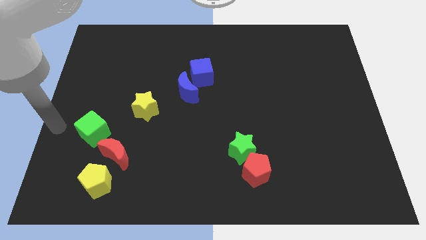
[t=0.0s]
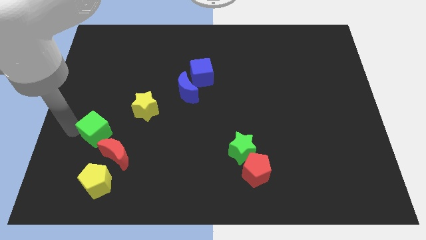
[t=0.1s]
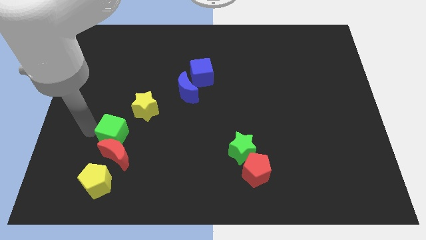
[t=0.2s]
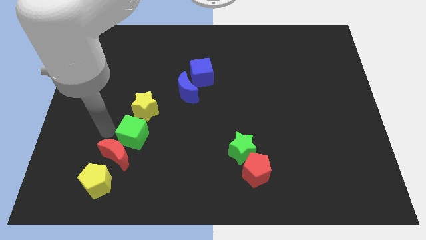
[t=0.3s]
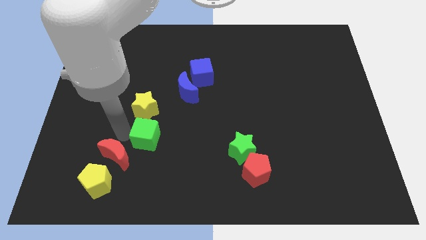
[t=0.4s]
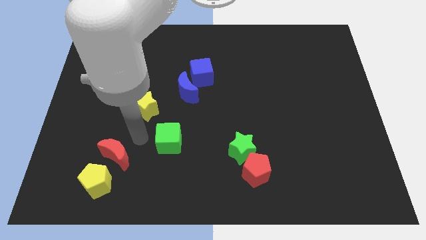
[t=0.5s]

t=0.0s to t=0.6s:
push green cube below yellow star

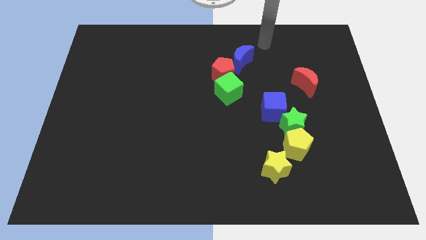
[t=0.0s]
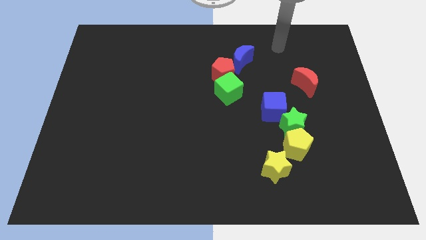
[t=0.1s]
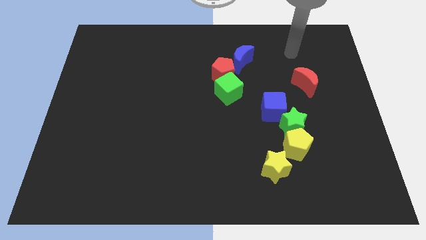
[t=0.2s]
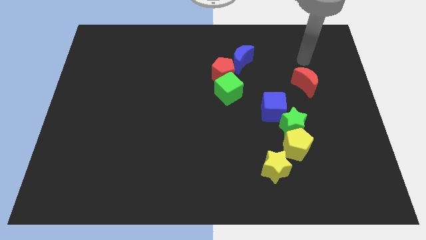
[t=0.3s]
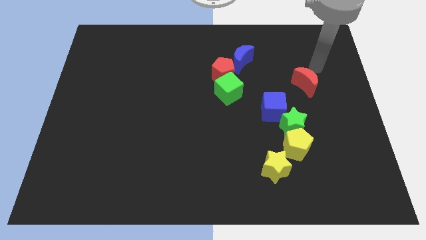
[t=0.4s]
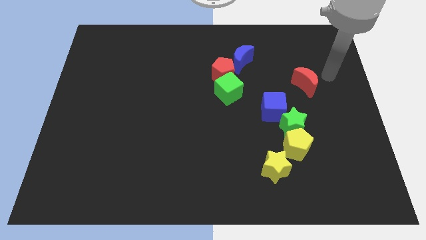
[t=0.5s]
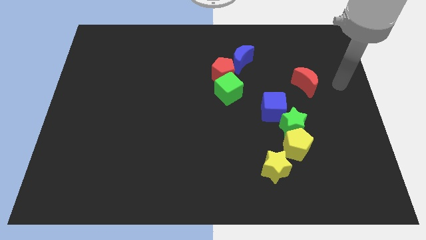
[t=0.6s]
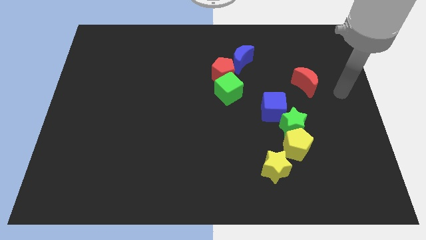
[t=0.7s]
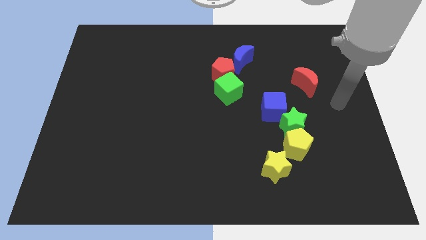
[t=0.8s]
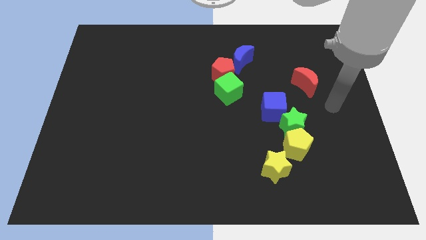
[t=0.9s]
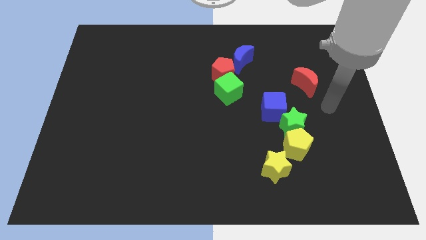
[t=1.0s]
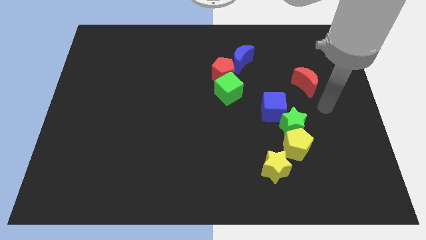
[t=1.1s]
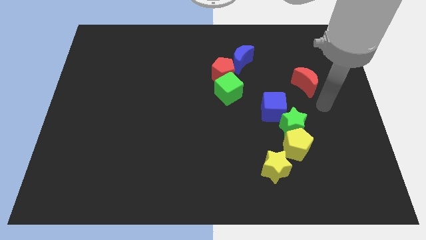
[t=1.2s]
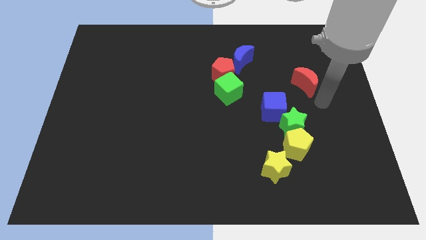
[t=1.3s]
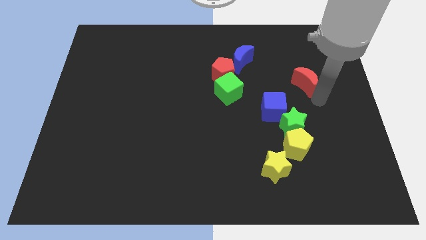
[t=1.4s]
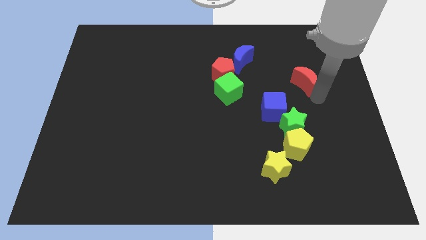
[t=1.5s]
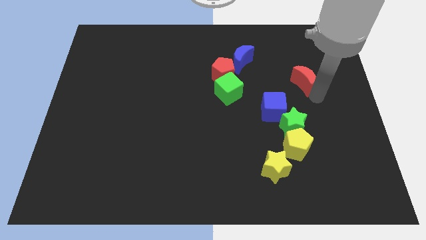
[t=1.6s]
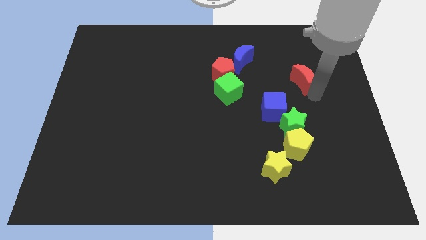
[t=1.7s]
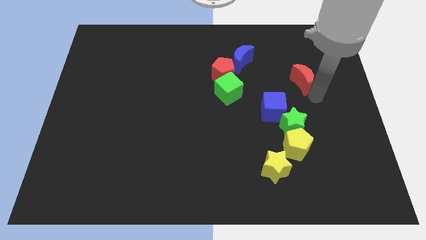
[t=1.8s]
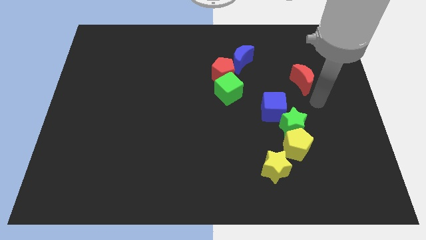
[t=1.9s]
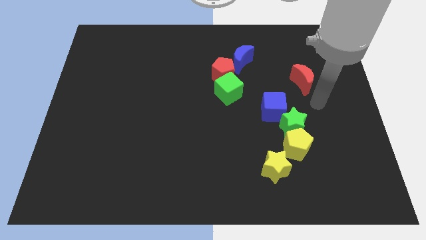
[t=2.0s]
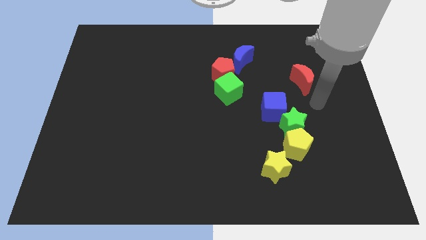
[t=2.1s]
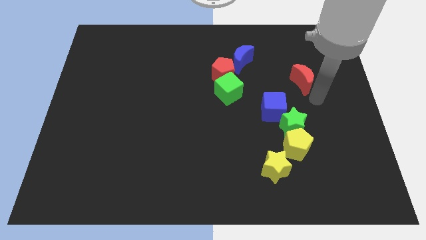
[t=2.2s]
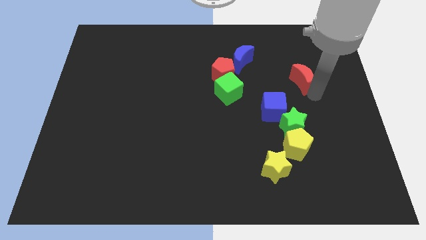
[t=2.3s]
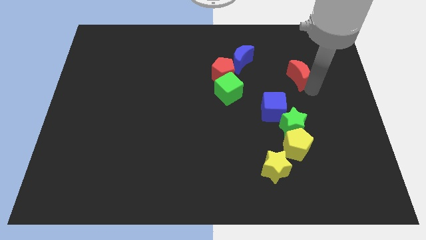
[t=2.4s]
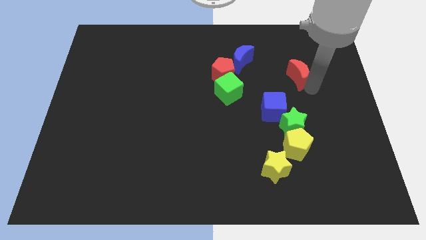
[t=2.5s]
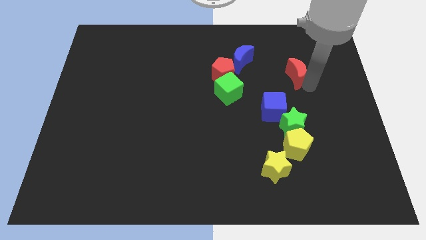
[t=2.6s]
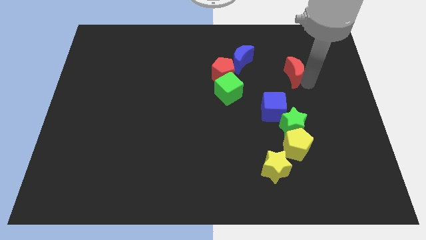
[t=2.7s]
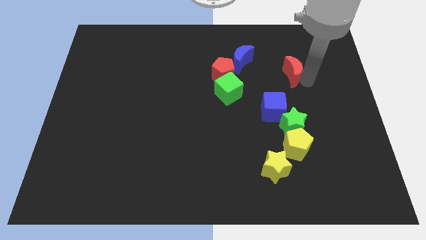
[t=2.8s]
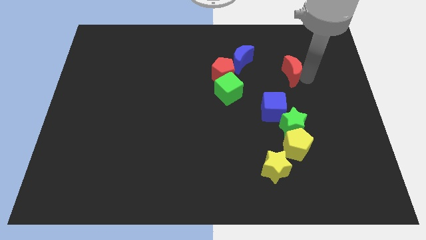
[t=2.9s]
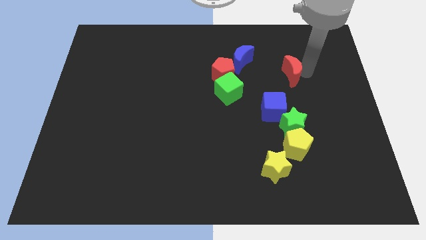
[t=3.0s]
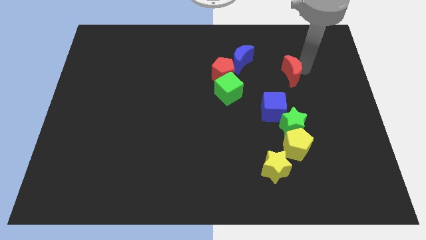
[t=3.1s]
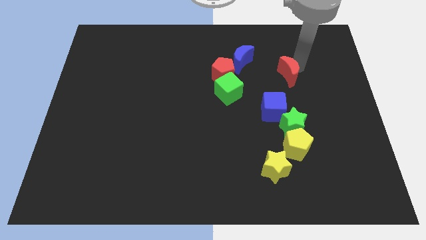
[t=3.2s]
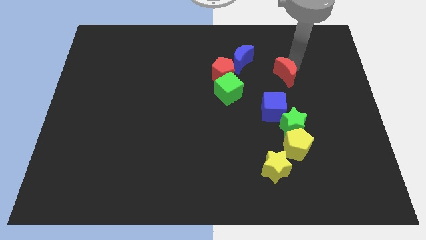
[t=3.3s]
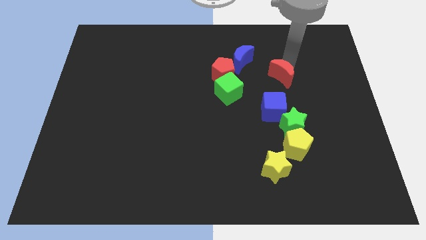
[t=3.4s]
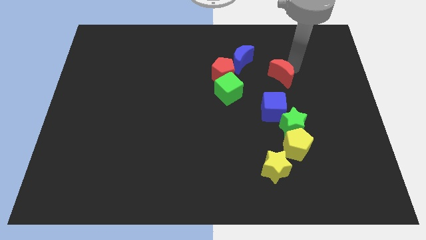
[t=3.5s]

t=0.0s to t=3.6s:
push the red crescent slightly to the right

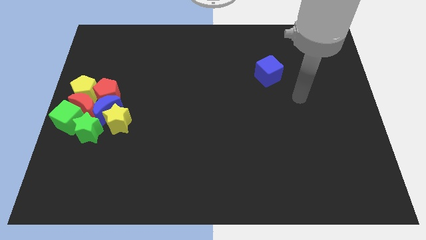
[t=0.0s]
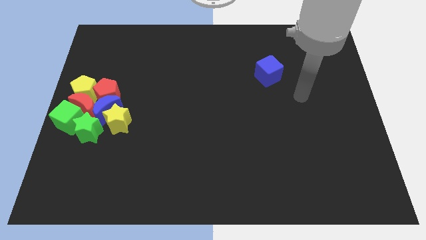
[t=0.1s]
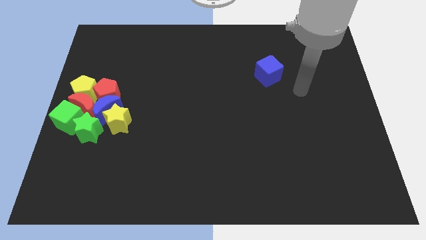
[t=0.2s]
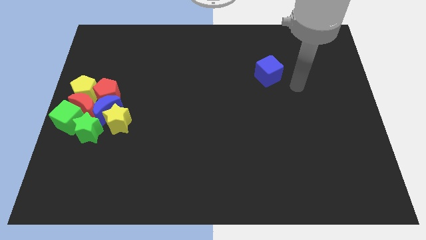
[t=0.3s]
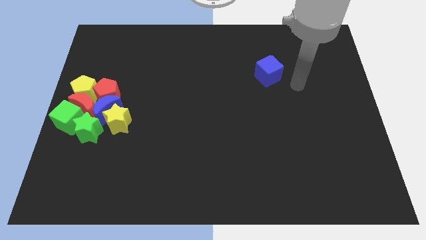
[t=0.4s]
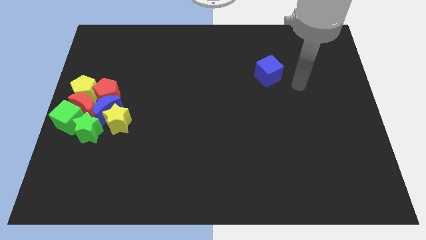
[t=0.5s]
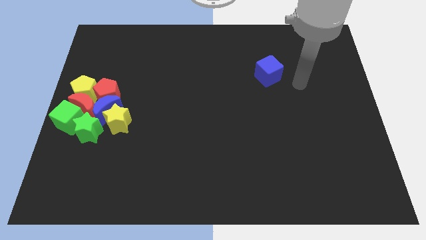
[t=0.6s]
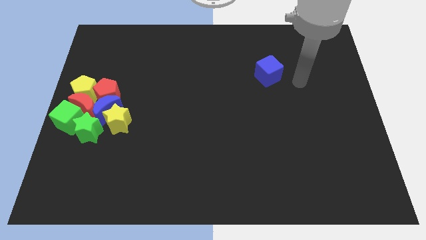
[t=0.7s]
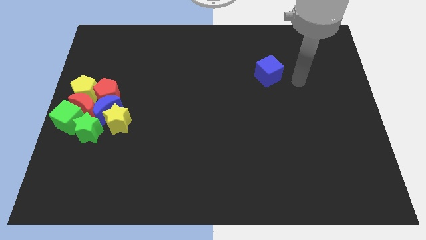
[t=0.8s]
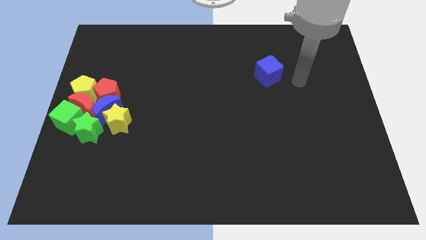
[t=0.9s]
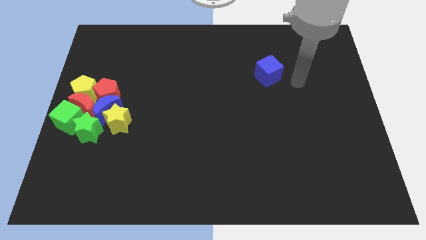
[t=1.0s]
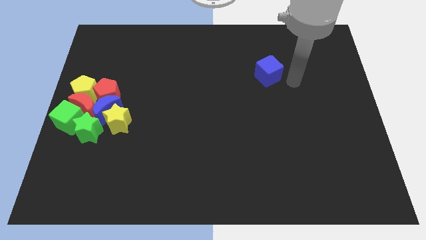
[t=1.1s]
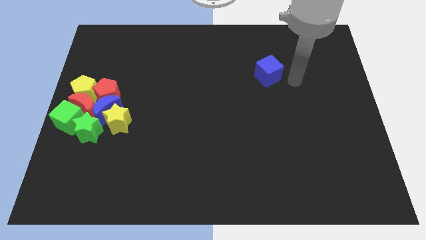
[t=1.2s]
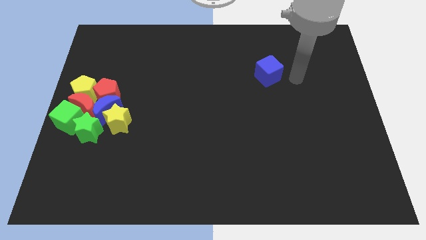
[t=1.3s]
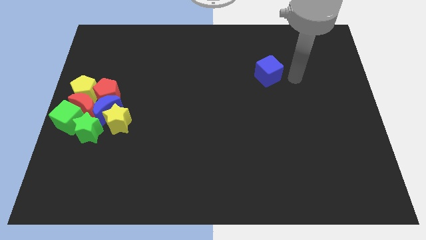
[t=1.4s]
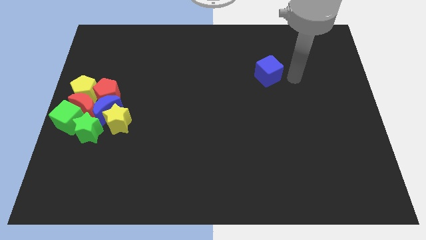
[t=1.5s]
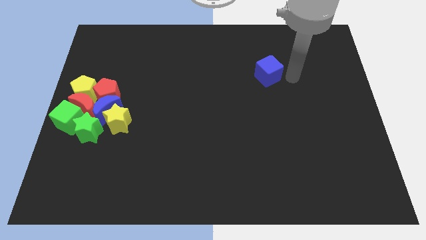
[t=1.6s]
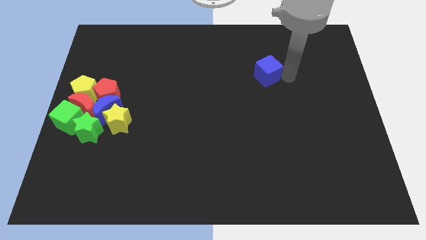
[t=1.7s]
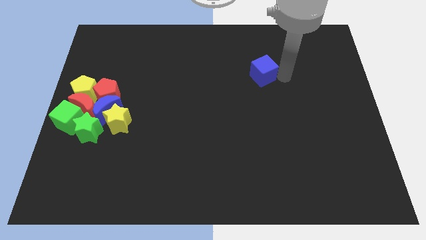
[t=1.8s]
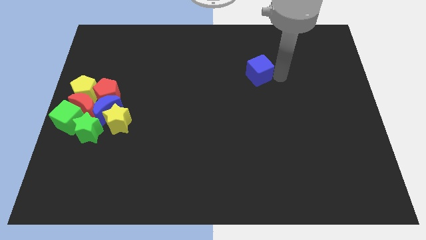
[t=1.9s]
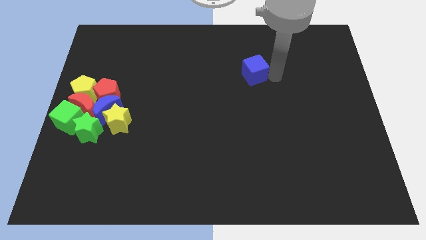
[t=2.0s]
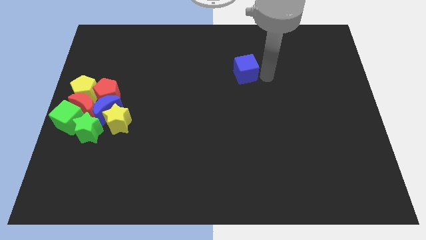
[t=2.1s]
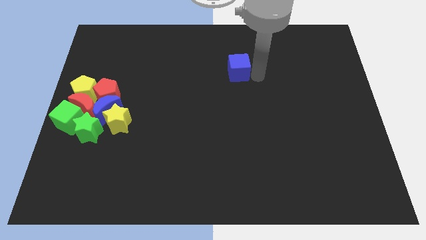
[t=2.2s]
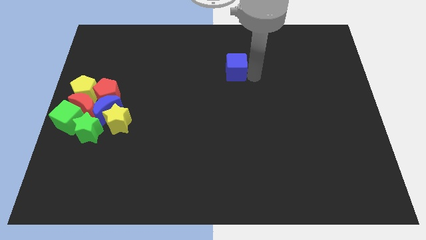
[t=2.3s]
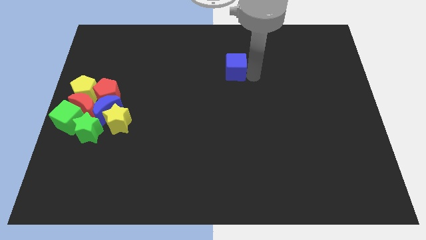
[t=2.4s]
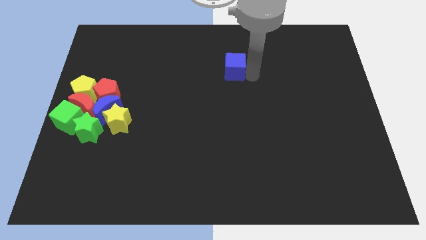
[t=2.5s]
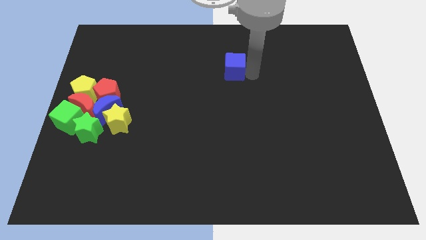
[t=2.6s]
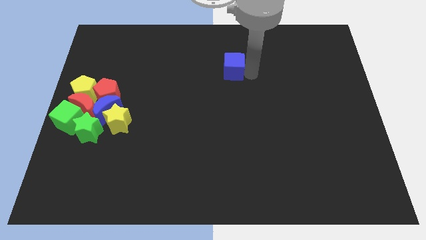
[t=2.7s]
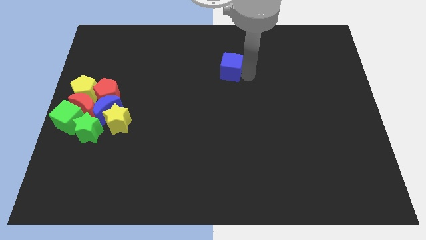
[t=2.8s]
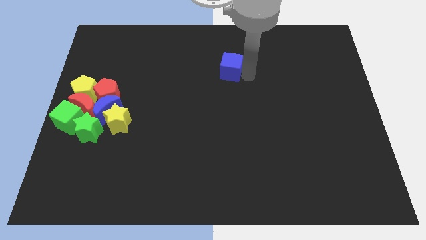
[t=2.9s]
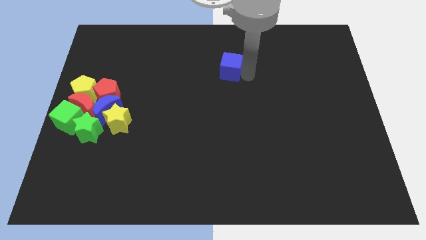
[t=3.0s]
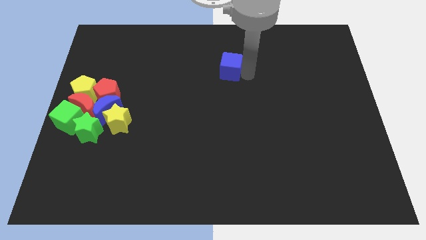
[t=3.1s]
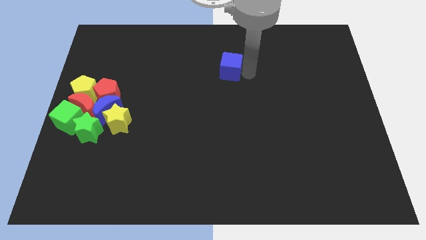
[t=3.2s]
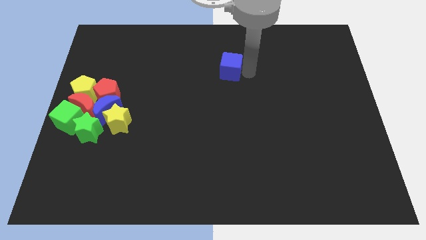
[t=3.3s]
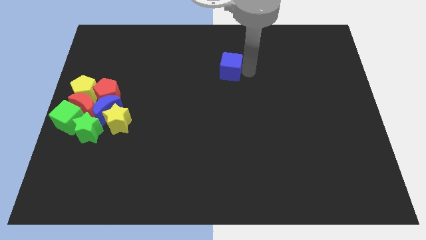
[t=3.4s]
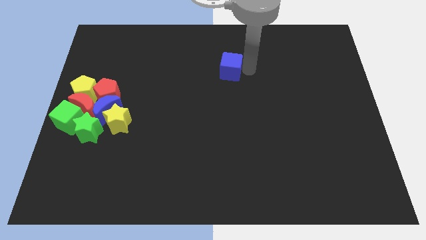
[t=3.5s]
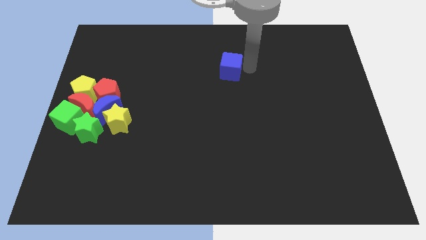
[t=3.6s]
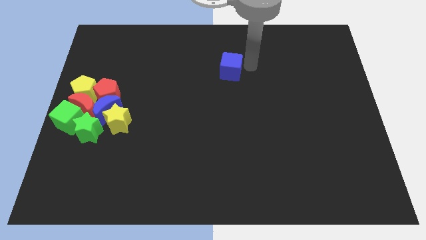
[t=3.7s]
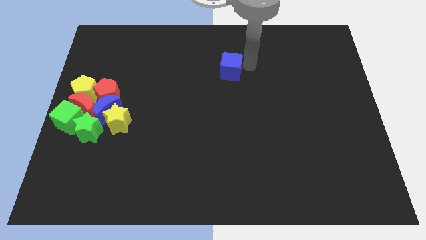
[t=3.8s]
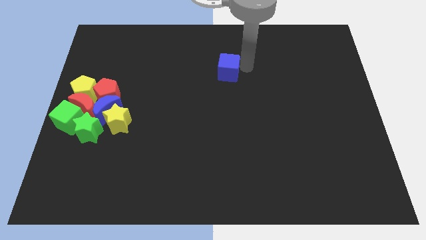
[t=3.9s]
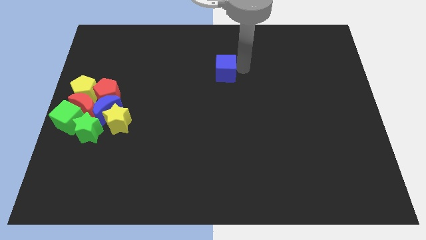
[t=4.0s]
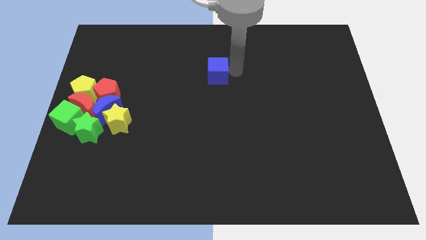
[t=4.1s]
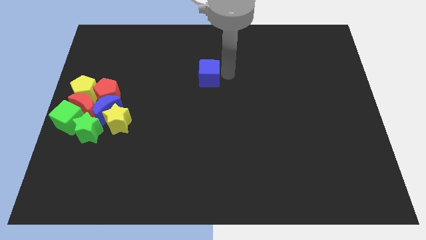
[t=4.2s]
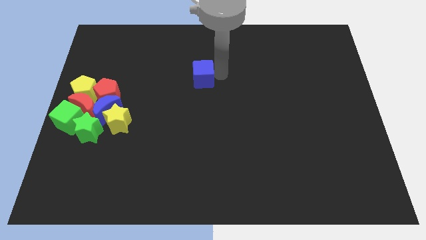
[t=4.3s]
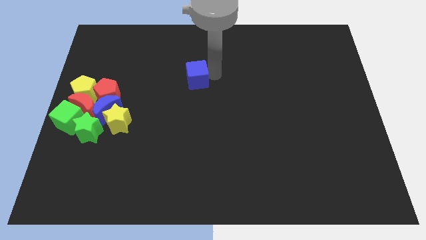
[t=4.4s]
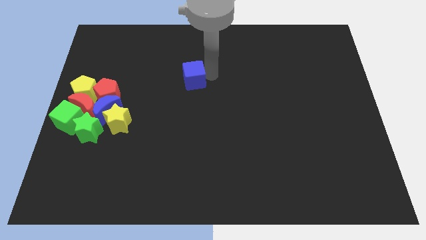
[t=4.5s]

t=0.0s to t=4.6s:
push the blue cube towards the center of the board

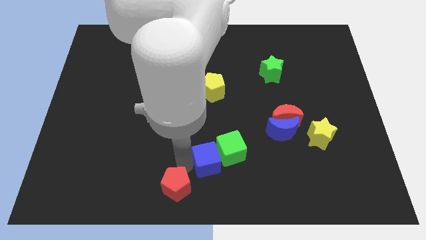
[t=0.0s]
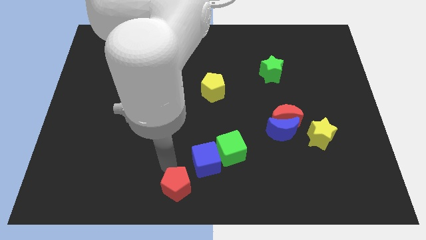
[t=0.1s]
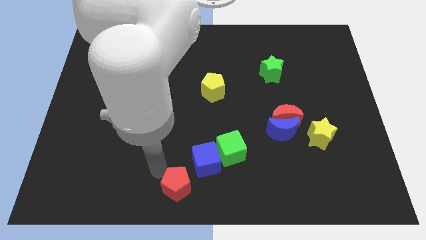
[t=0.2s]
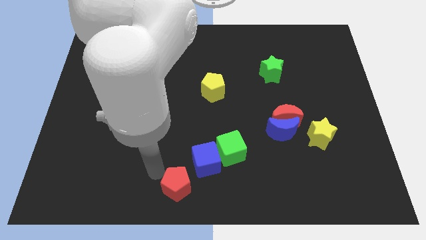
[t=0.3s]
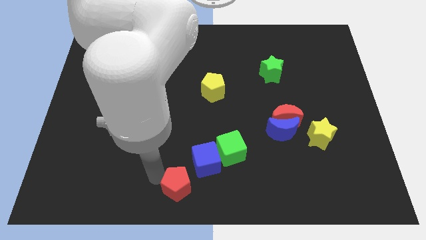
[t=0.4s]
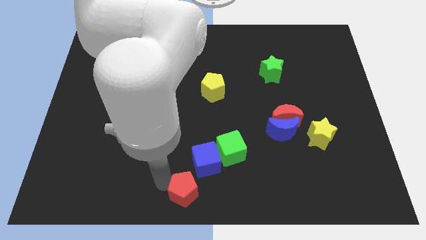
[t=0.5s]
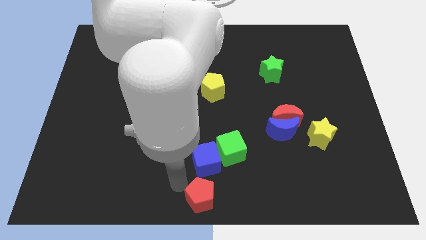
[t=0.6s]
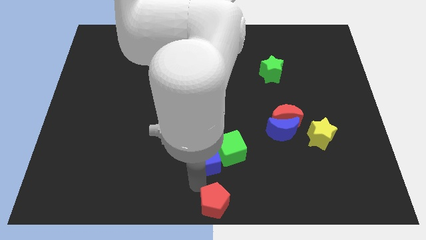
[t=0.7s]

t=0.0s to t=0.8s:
move the red pentagon to the bottom center of the board
